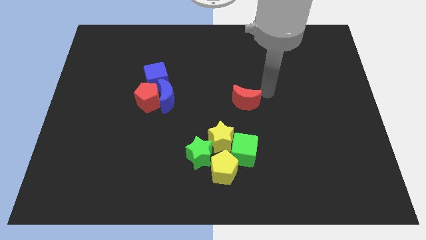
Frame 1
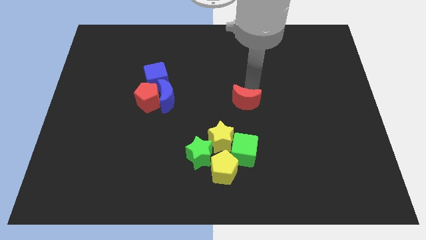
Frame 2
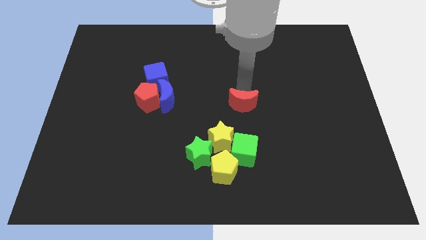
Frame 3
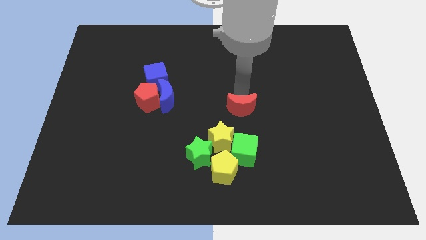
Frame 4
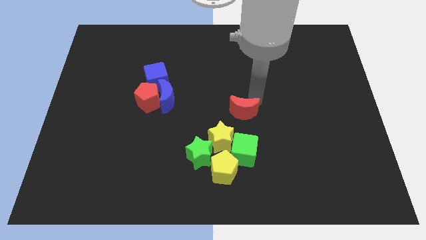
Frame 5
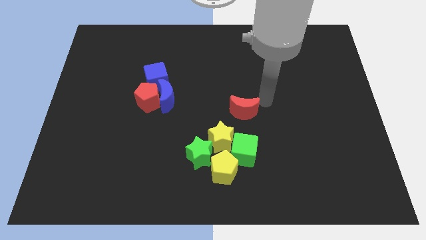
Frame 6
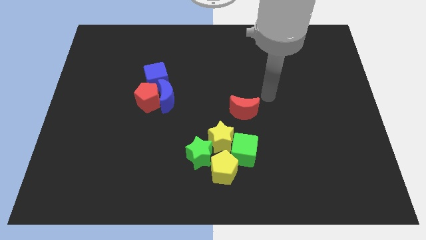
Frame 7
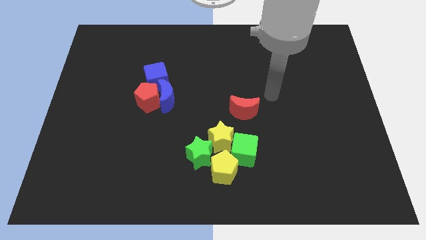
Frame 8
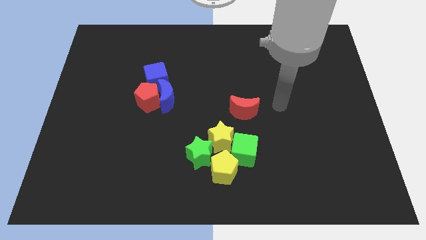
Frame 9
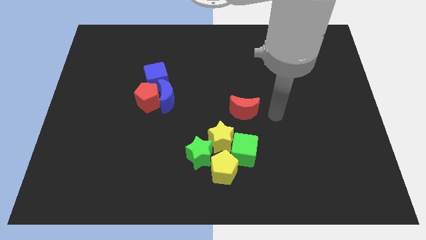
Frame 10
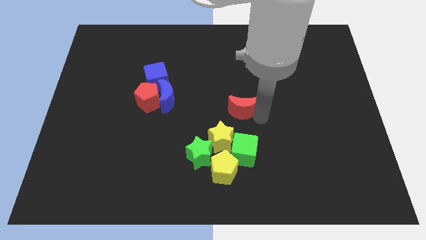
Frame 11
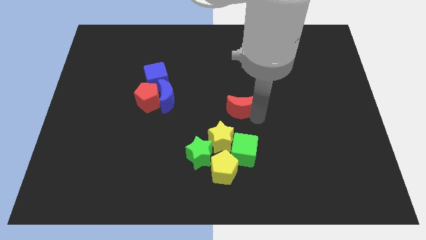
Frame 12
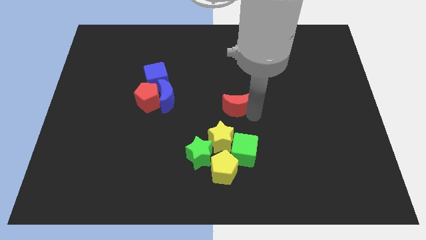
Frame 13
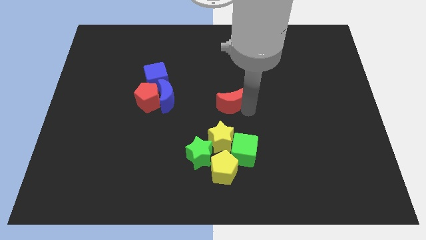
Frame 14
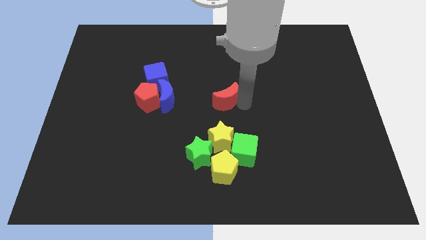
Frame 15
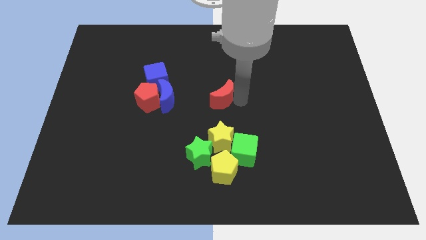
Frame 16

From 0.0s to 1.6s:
move the red crescent slightly left side

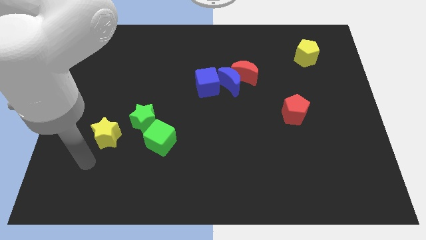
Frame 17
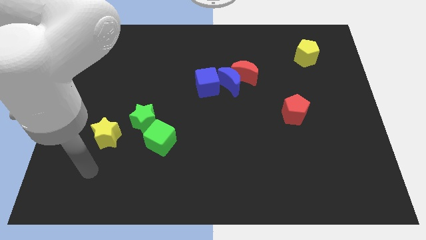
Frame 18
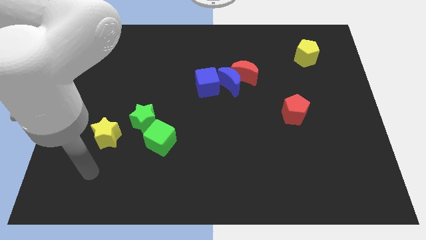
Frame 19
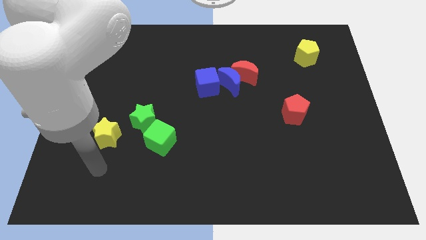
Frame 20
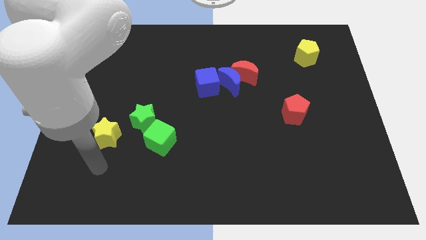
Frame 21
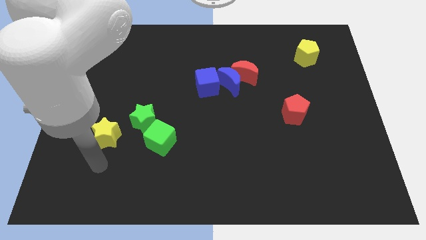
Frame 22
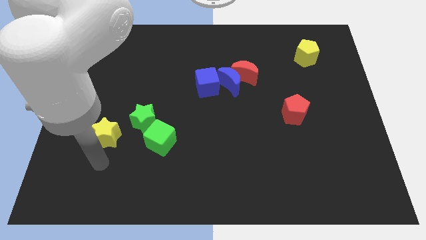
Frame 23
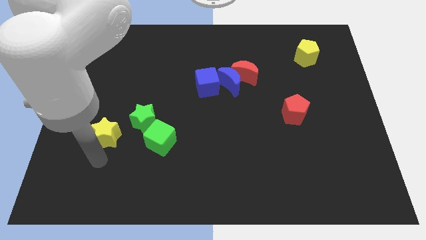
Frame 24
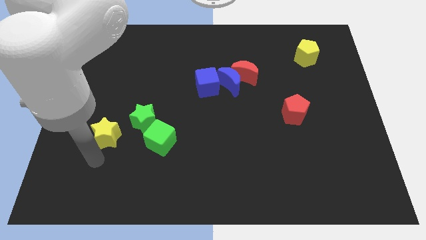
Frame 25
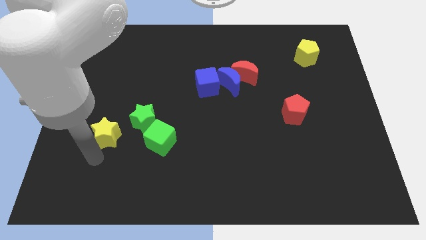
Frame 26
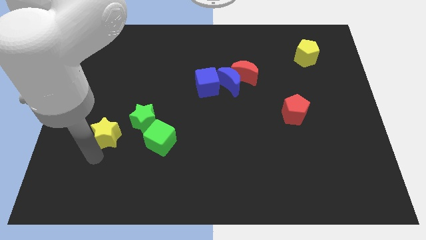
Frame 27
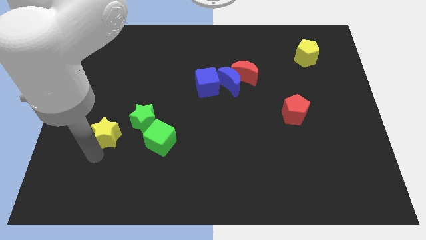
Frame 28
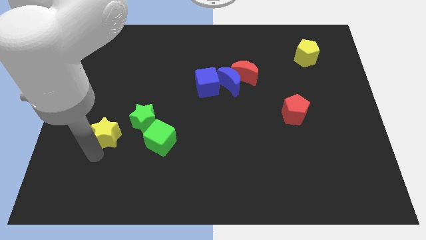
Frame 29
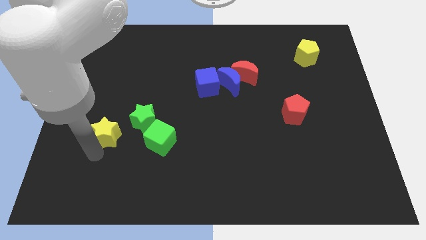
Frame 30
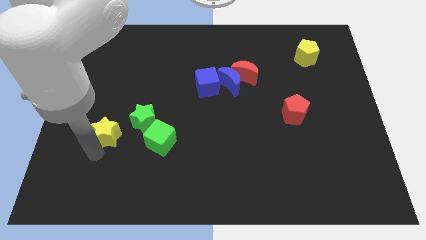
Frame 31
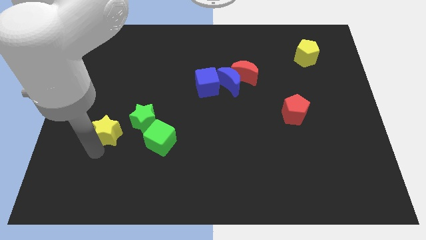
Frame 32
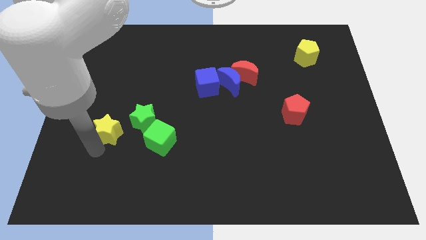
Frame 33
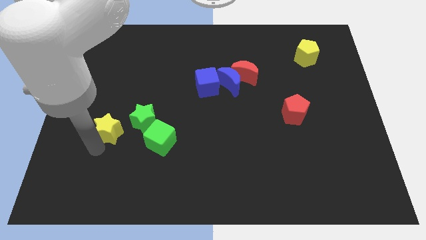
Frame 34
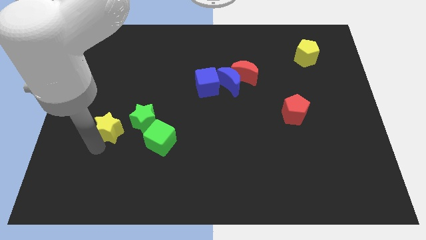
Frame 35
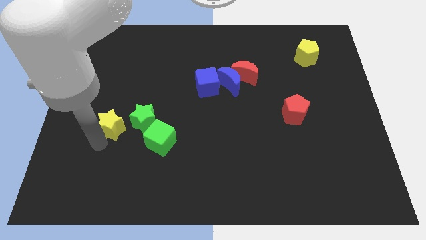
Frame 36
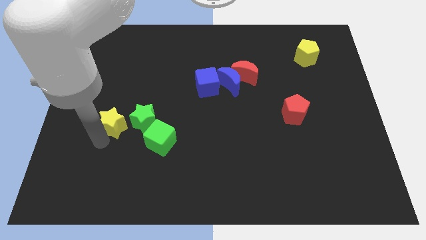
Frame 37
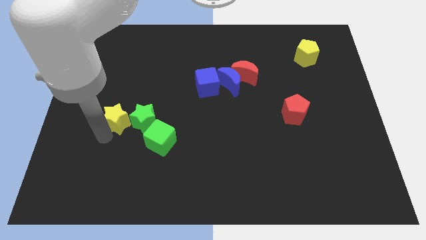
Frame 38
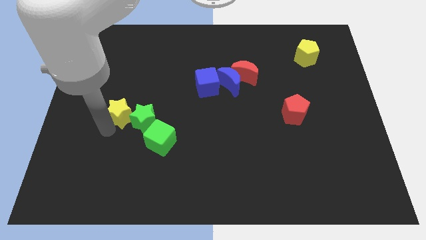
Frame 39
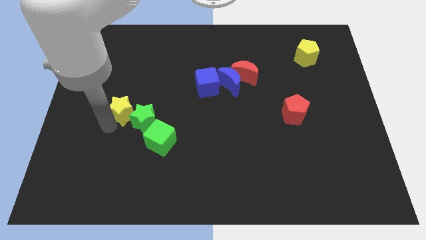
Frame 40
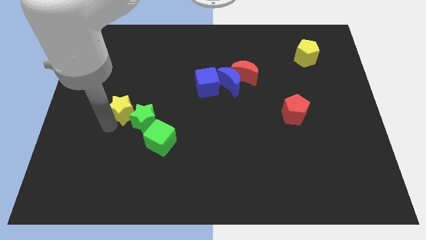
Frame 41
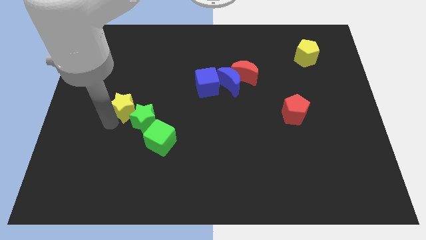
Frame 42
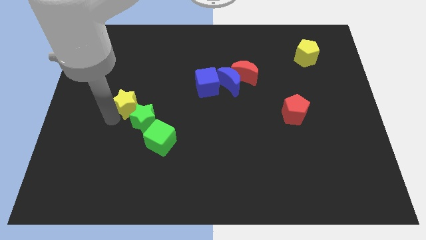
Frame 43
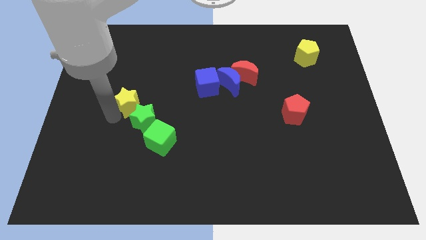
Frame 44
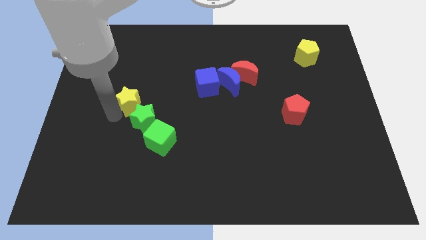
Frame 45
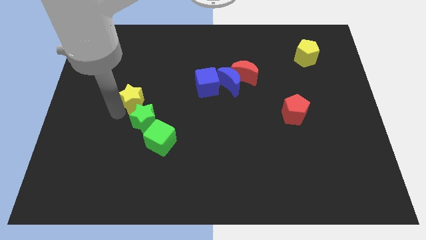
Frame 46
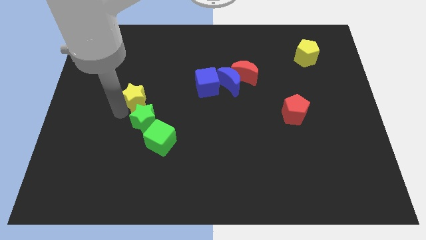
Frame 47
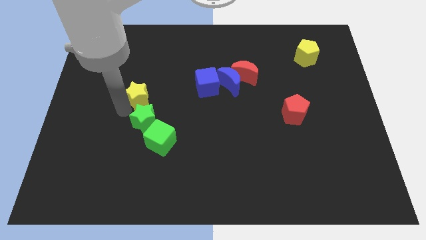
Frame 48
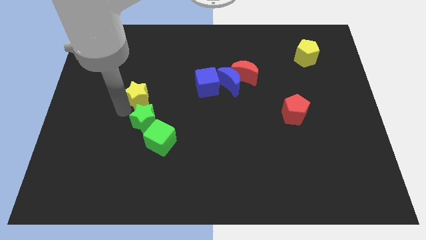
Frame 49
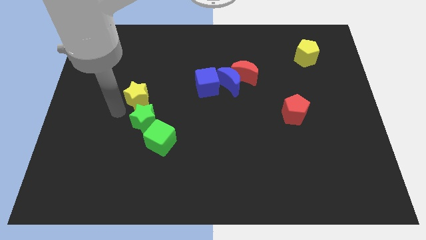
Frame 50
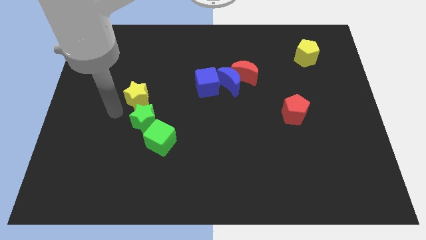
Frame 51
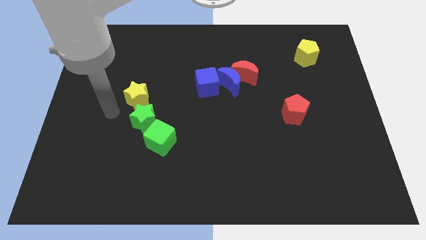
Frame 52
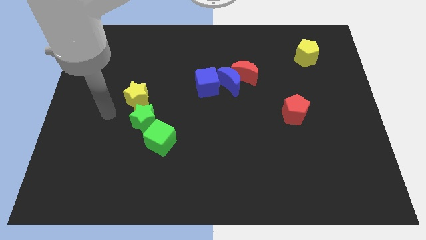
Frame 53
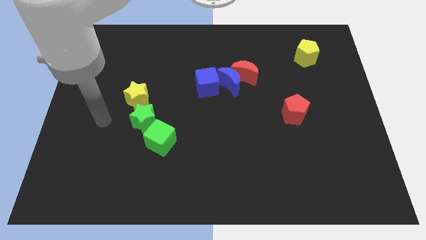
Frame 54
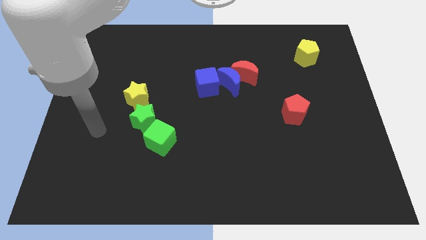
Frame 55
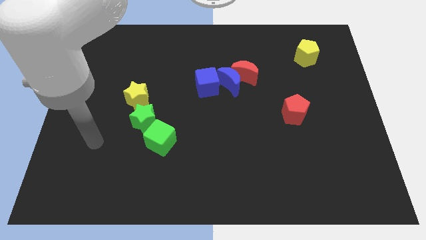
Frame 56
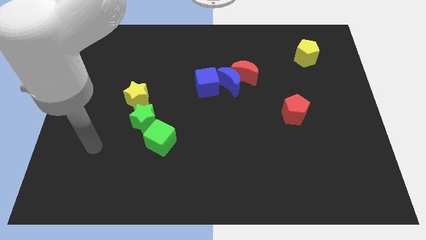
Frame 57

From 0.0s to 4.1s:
place the yellow star above the green star

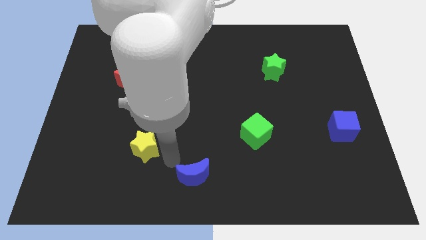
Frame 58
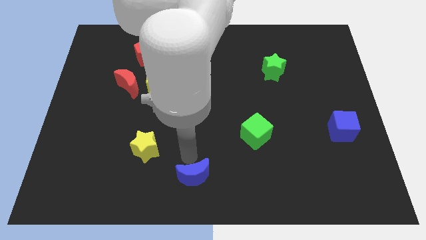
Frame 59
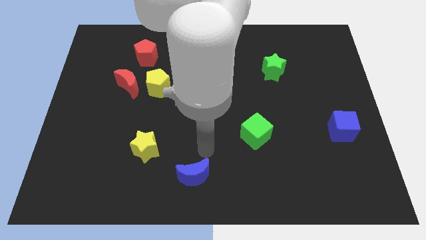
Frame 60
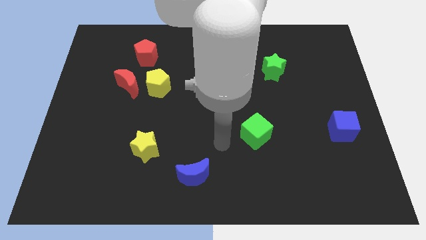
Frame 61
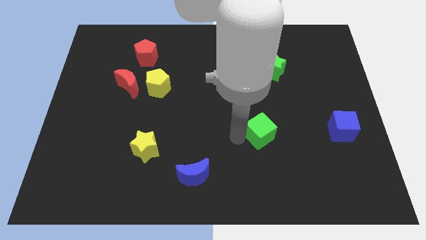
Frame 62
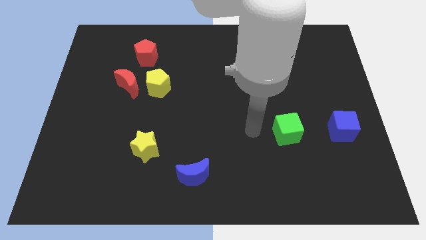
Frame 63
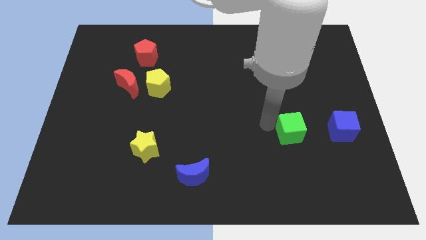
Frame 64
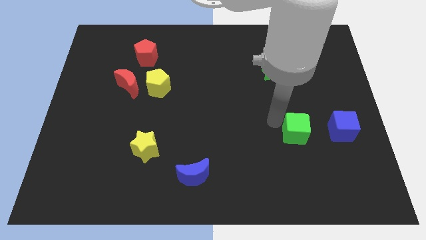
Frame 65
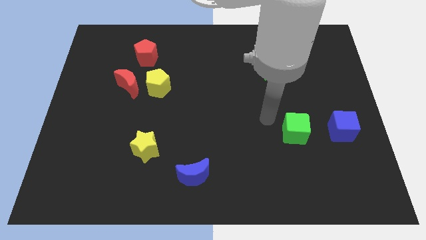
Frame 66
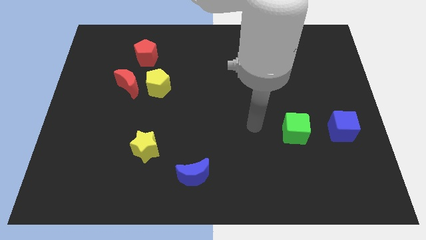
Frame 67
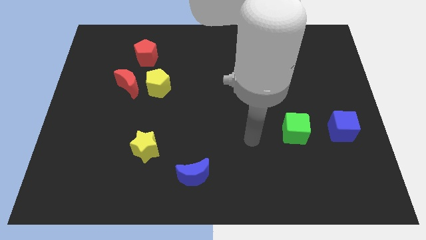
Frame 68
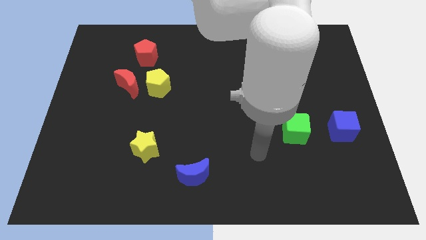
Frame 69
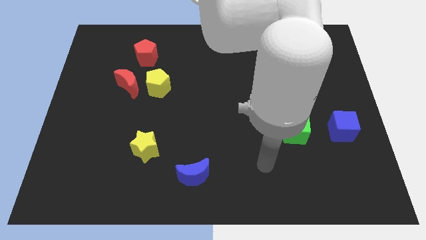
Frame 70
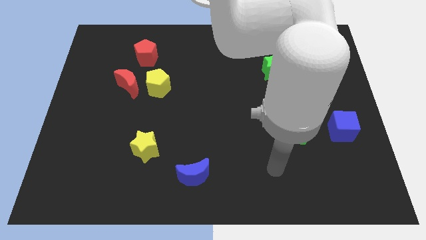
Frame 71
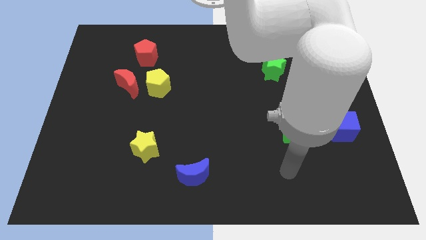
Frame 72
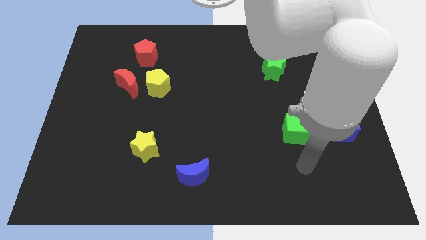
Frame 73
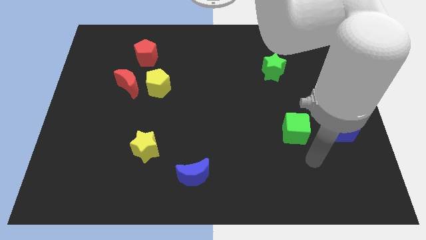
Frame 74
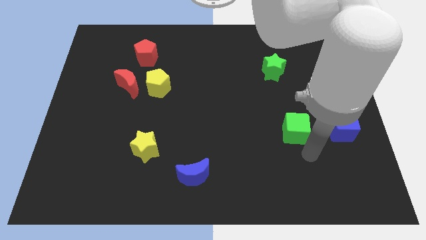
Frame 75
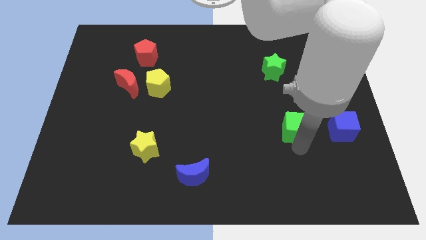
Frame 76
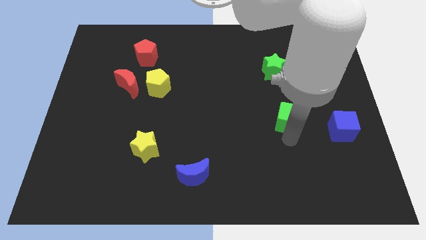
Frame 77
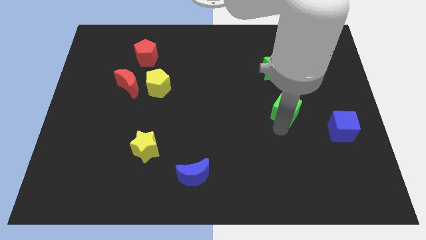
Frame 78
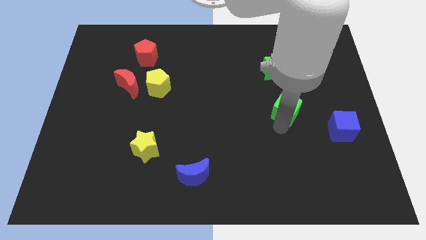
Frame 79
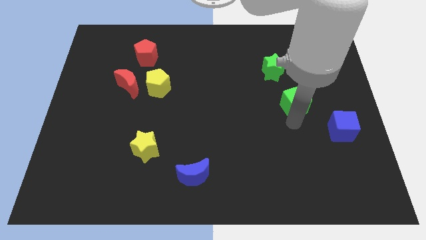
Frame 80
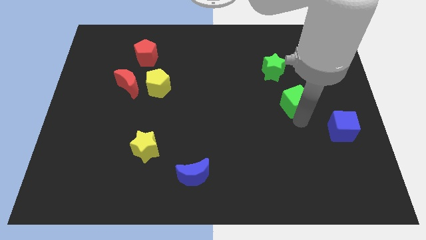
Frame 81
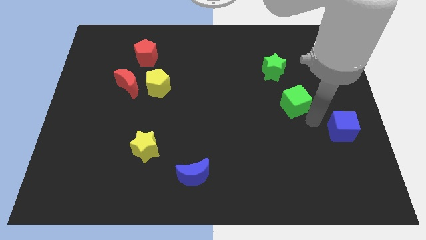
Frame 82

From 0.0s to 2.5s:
push the green cube to the top left of the blue cube

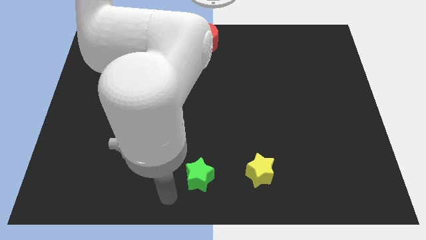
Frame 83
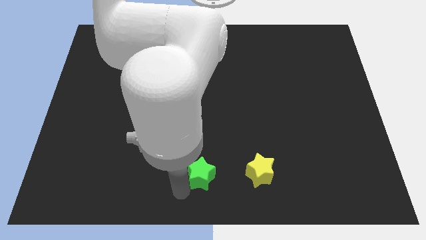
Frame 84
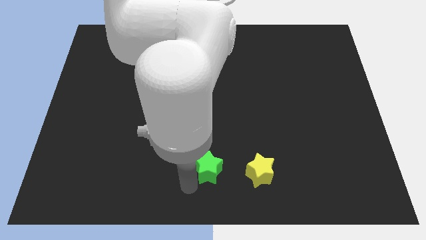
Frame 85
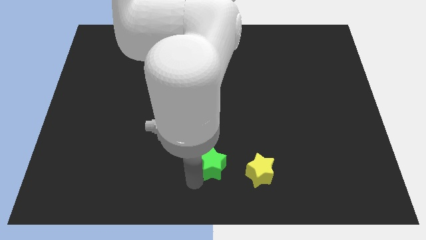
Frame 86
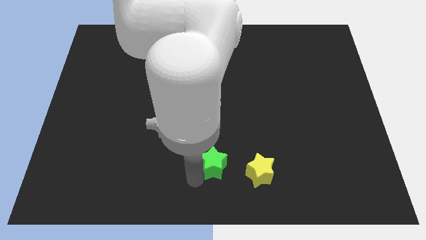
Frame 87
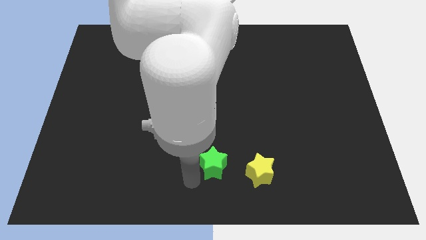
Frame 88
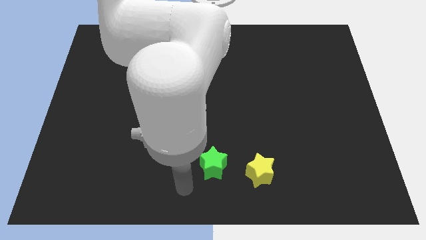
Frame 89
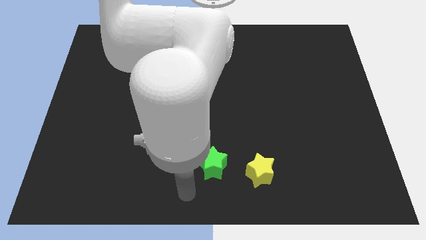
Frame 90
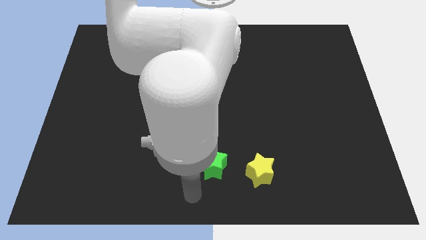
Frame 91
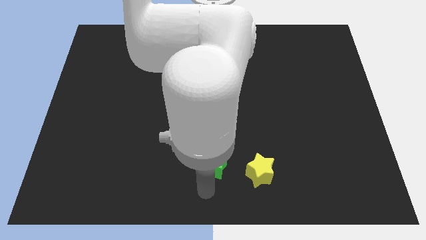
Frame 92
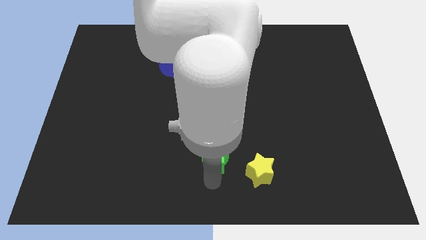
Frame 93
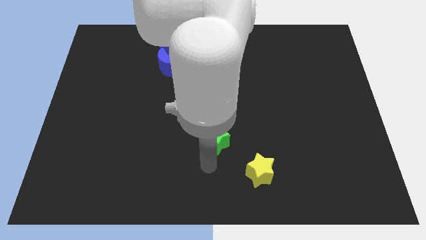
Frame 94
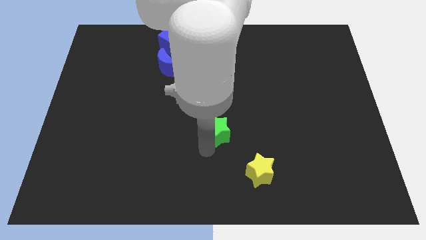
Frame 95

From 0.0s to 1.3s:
push the green star towards the center of the board
